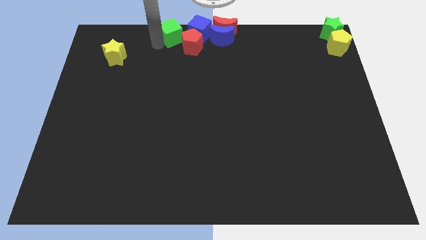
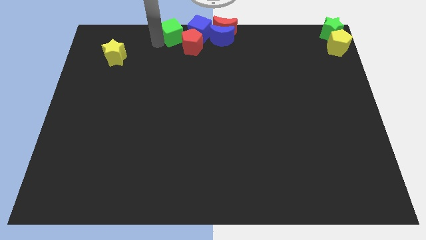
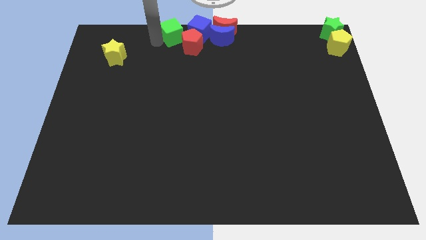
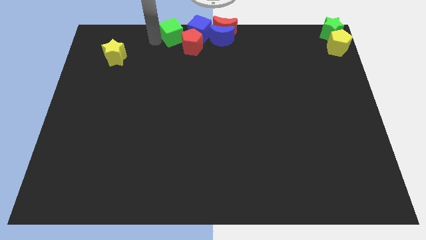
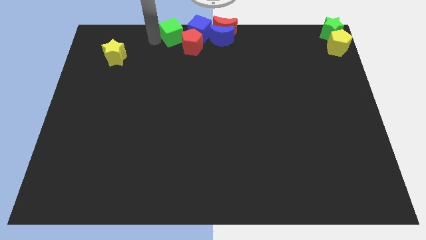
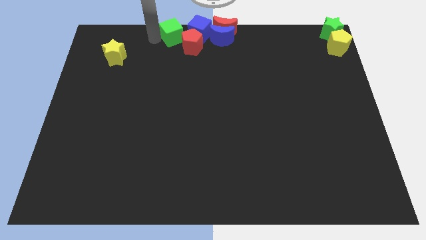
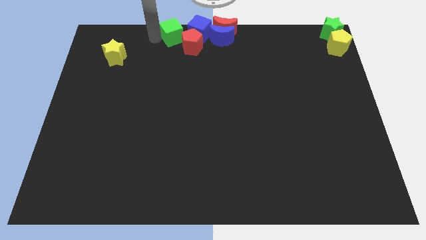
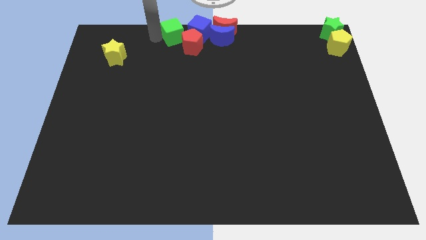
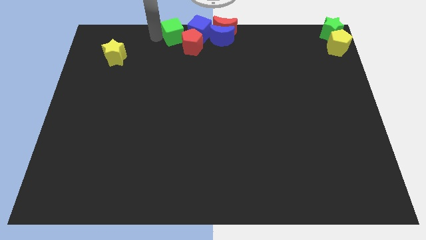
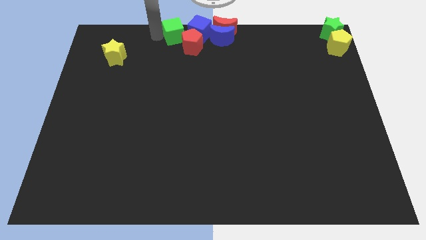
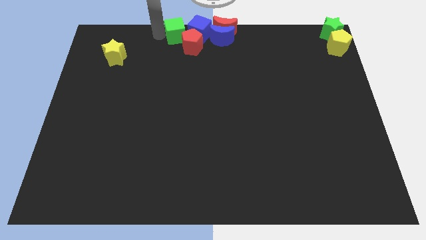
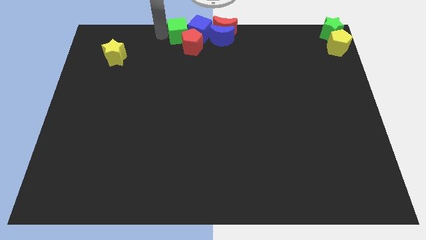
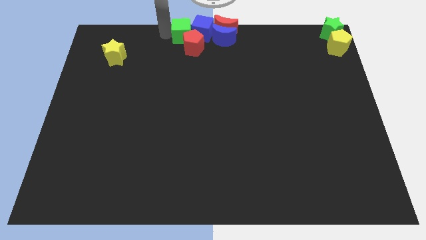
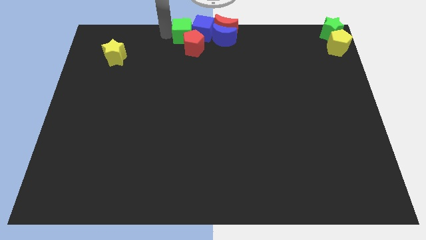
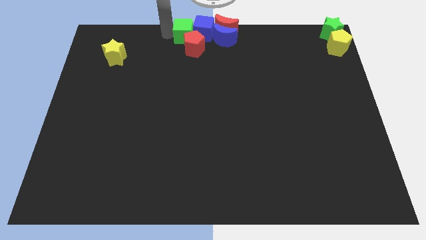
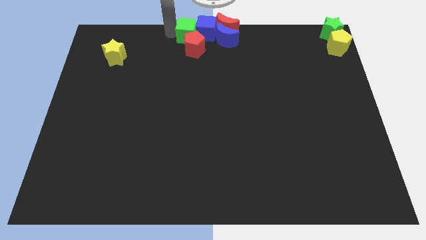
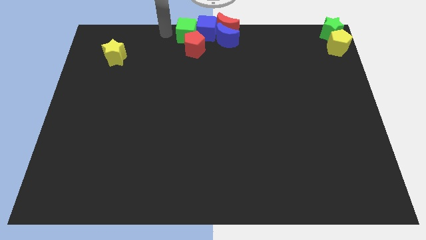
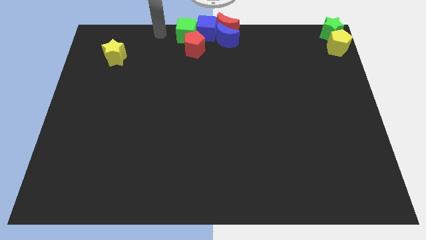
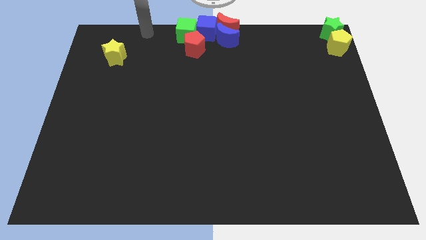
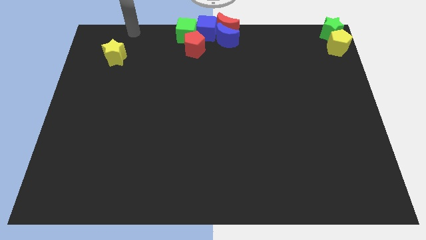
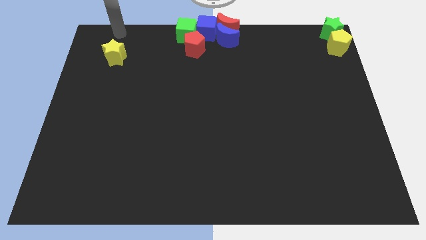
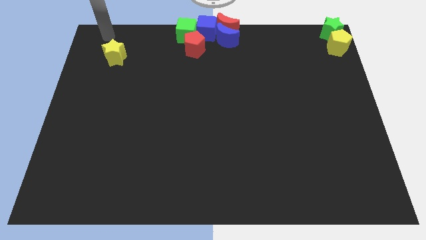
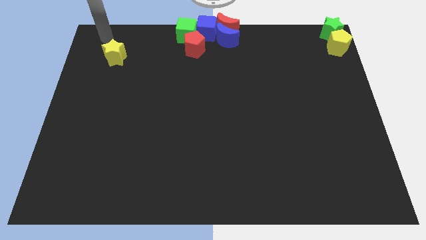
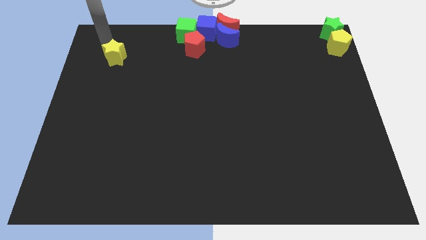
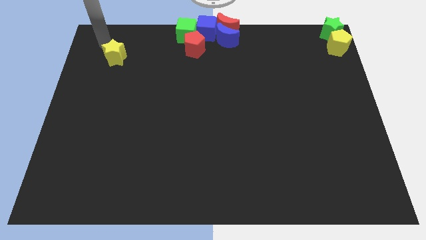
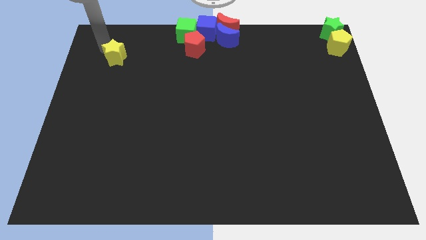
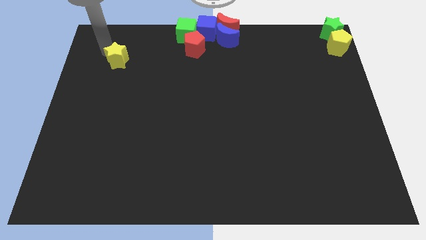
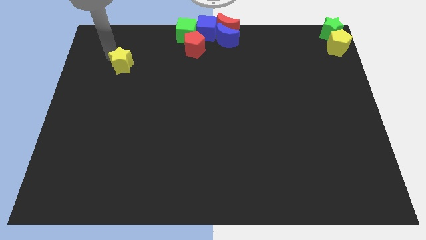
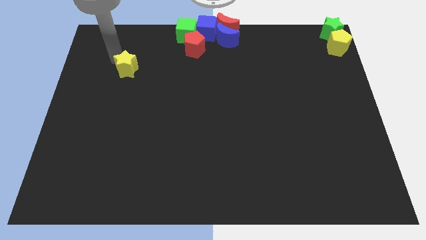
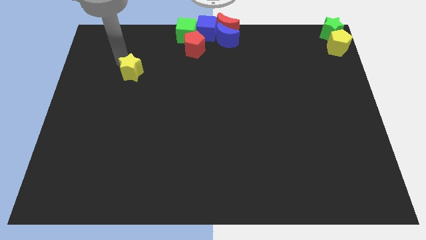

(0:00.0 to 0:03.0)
push the green cube to the group of blocks at the top center

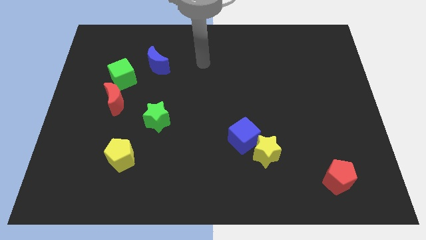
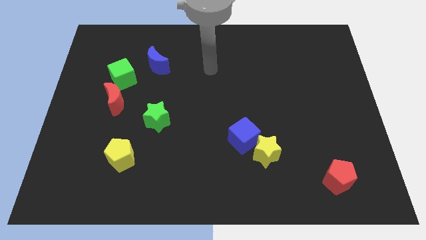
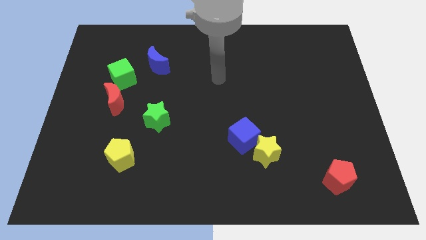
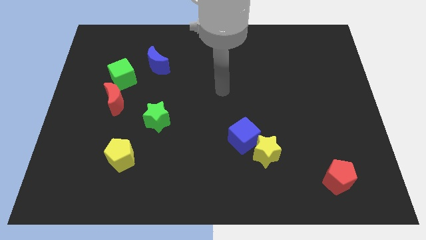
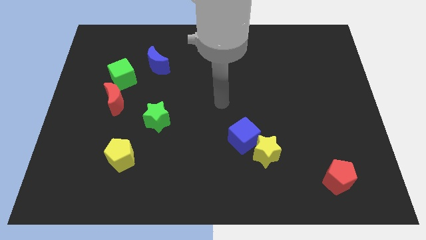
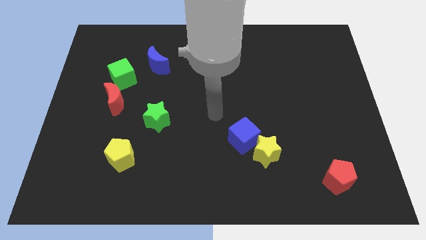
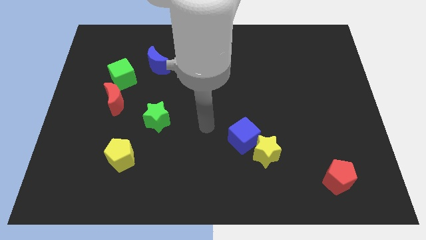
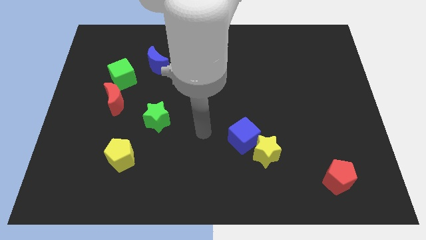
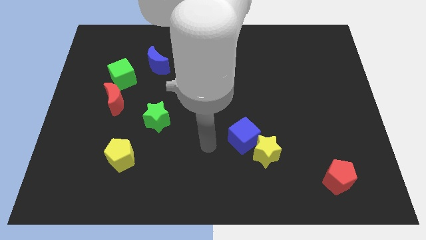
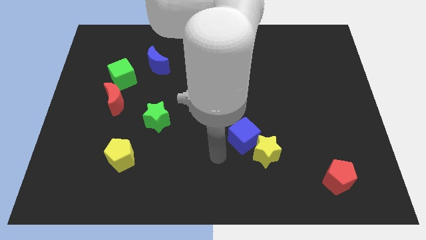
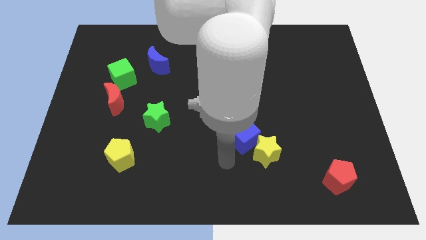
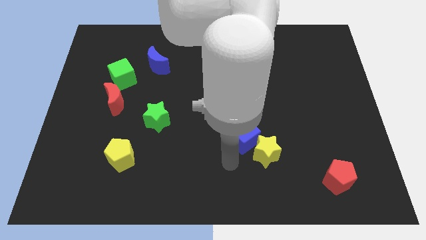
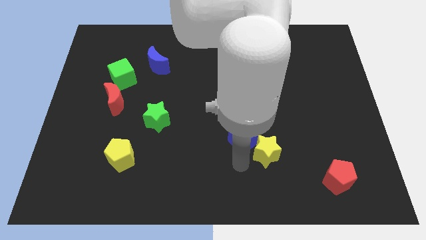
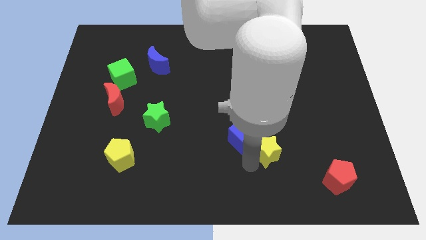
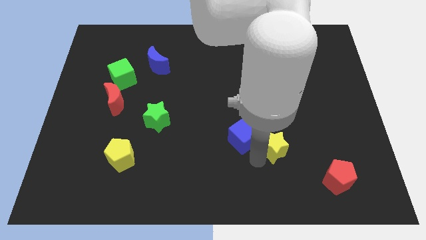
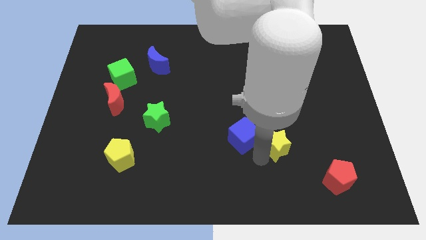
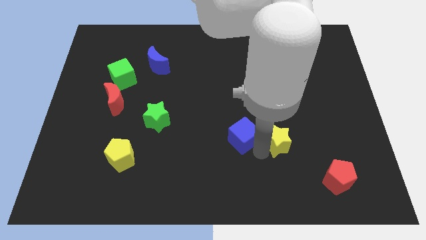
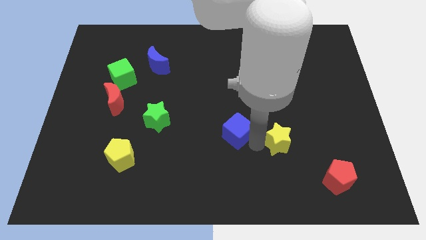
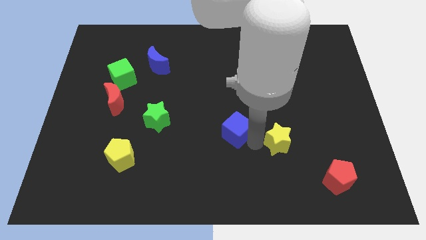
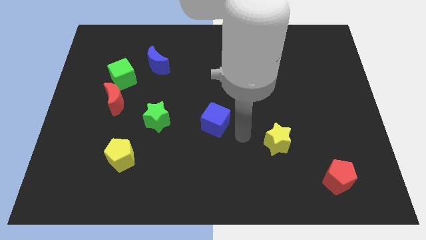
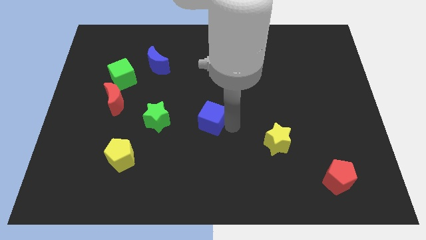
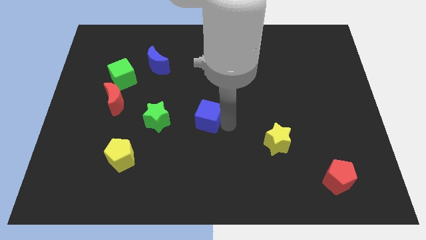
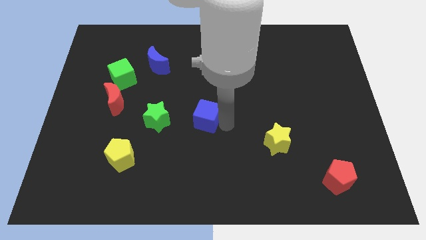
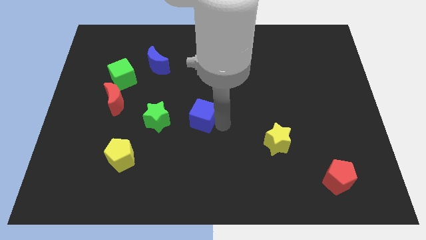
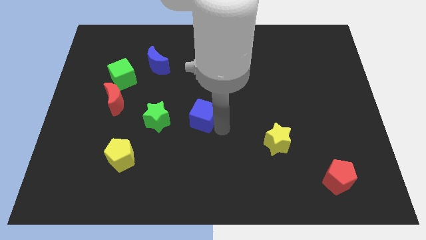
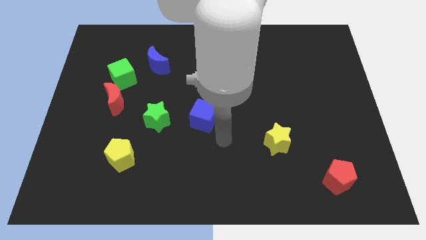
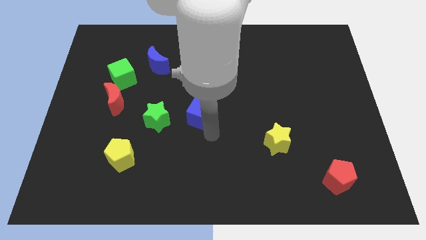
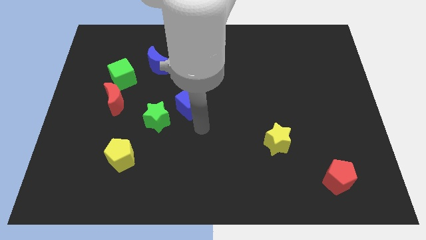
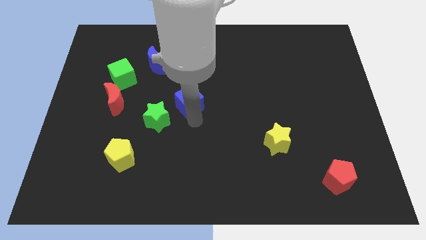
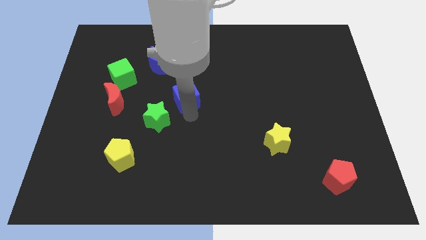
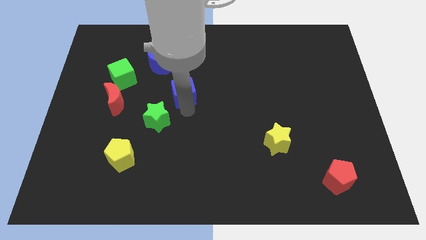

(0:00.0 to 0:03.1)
place the blue cube diagonally top right to the green star

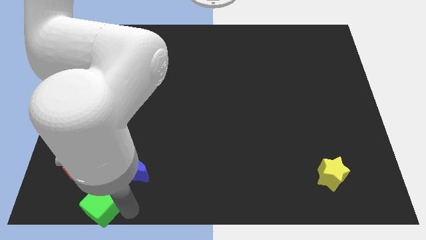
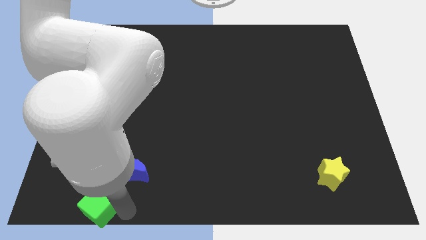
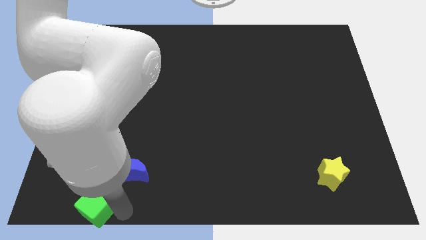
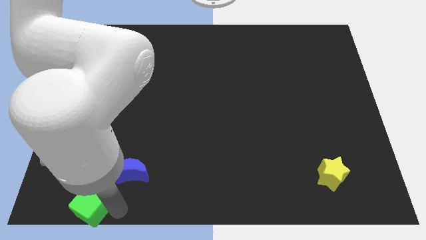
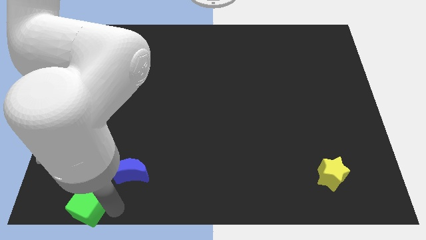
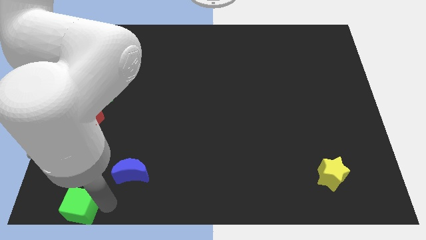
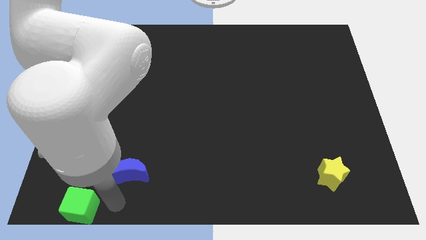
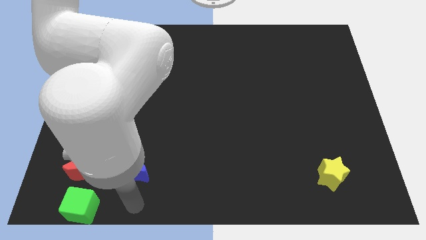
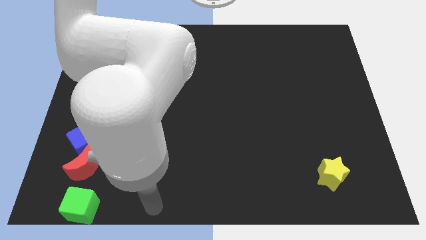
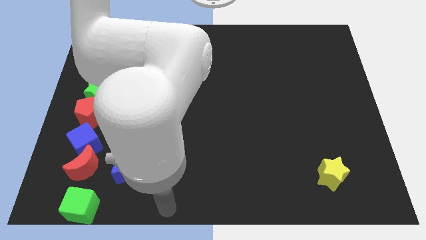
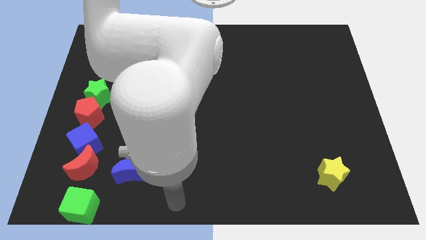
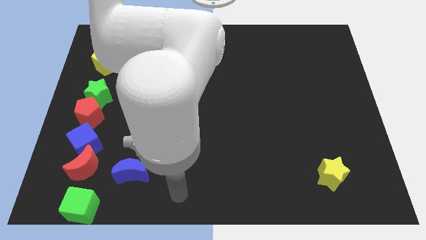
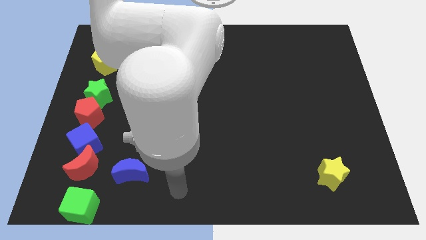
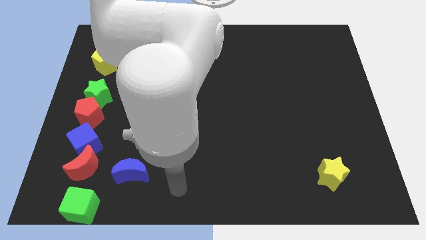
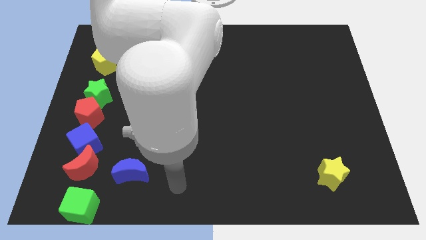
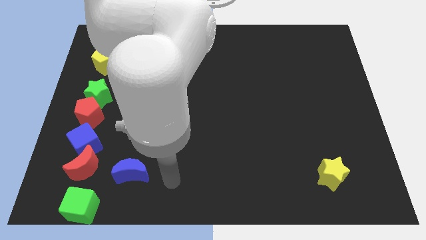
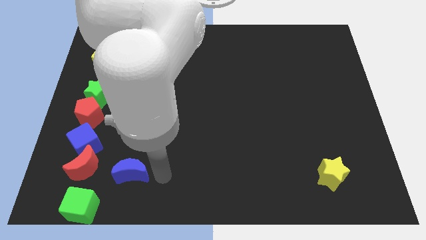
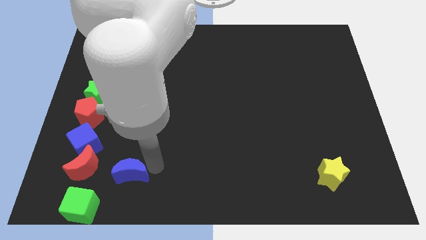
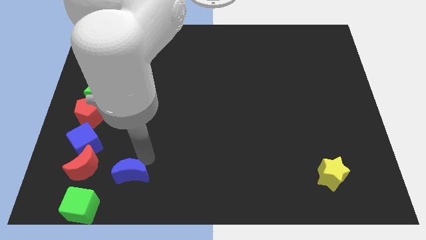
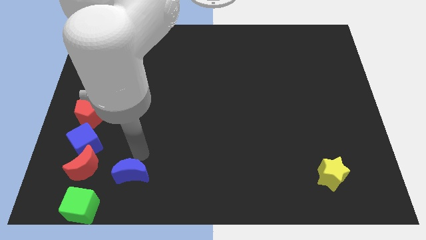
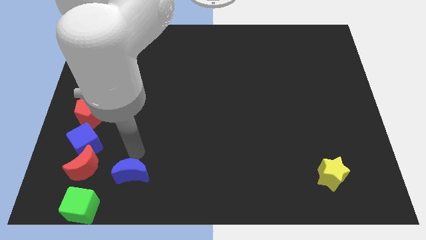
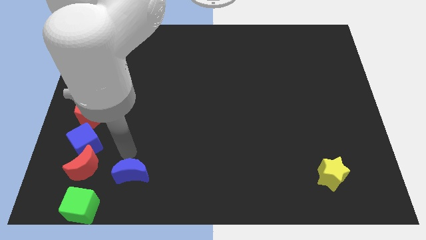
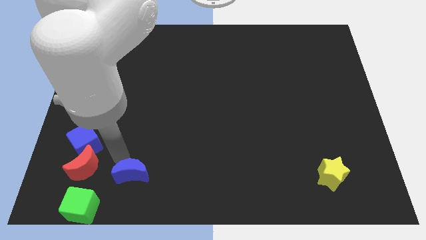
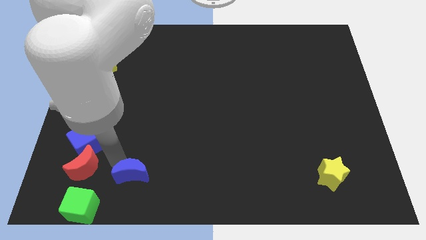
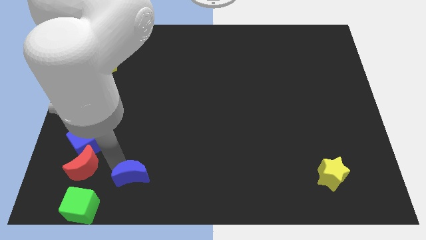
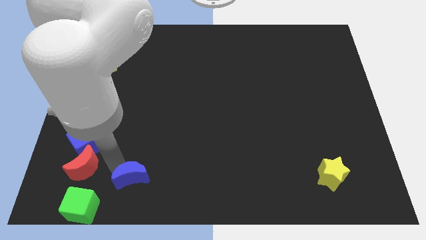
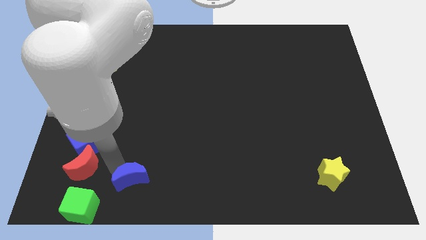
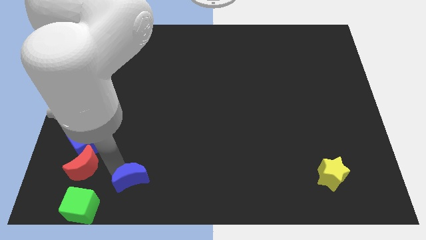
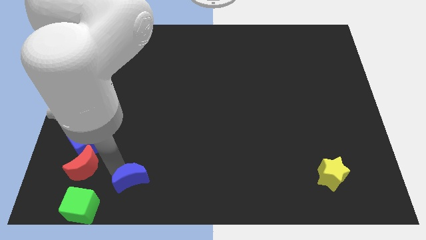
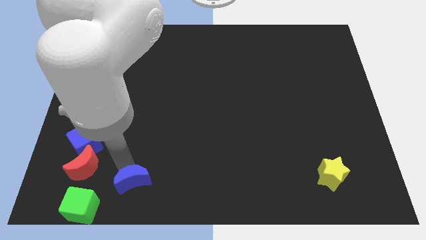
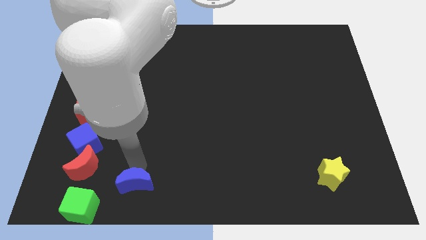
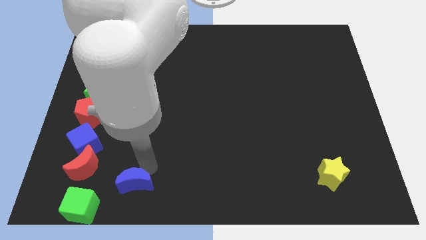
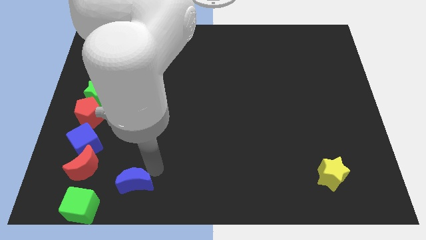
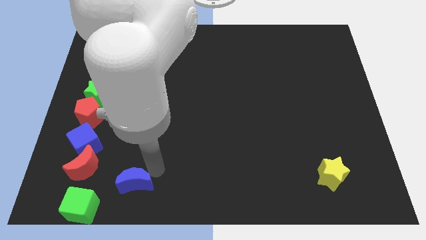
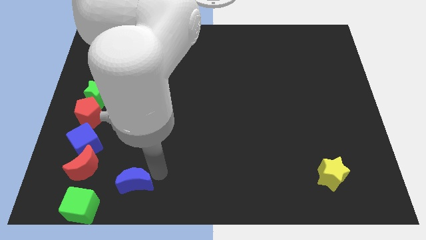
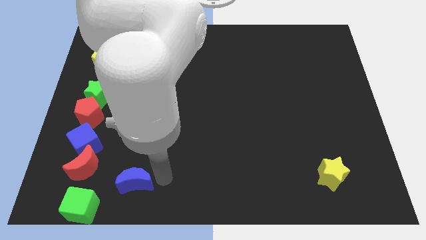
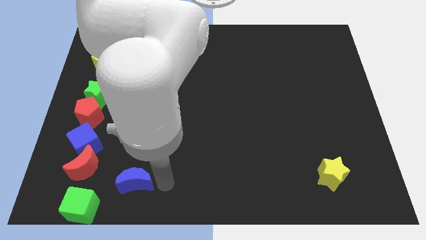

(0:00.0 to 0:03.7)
slightly move down the blue moon
